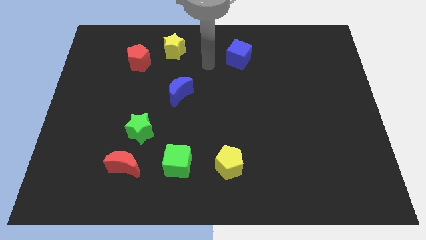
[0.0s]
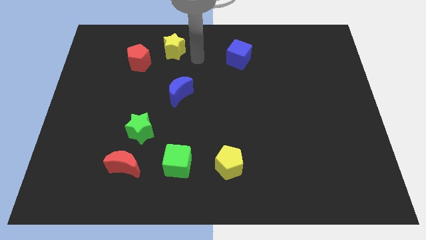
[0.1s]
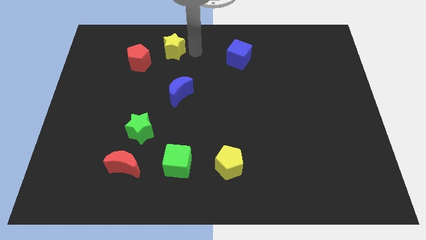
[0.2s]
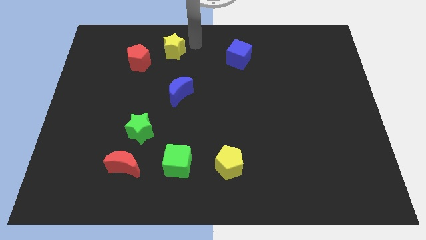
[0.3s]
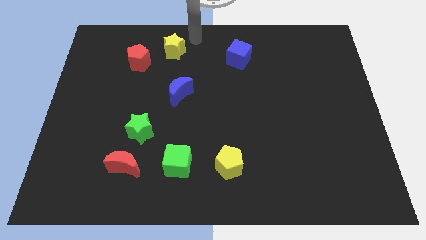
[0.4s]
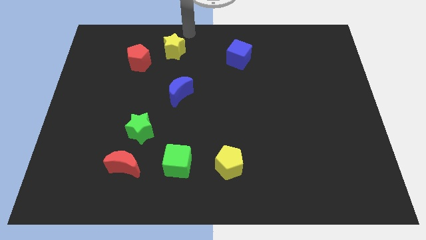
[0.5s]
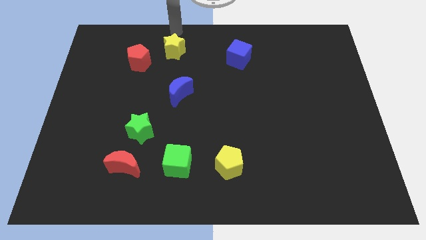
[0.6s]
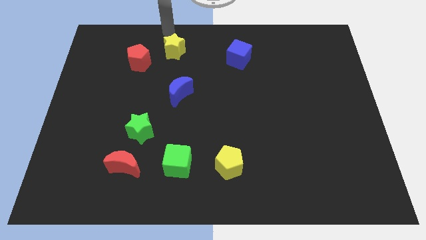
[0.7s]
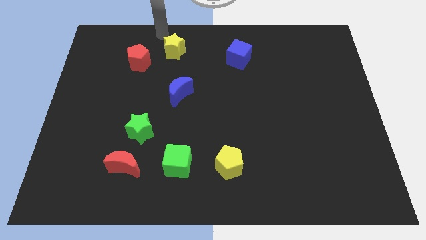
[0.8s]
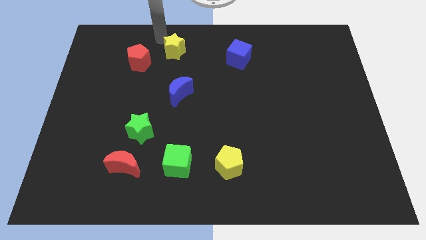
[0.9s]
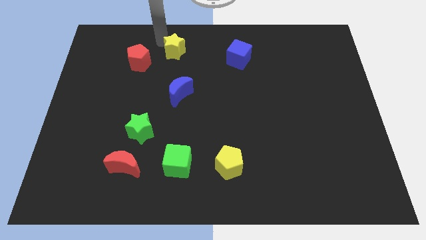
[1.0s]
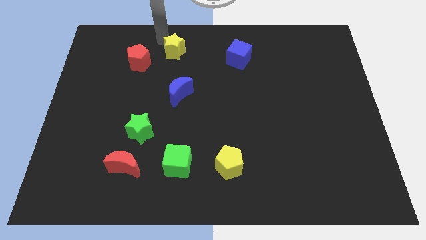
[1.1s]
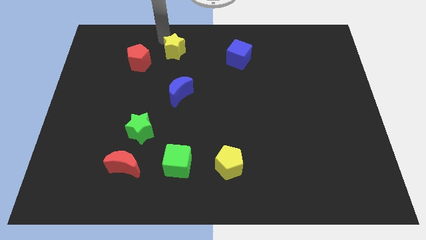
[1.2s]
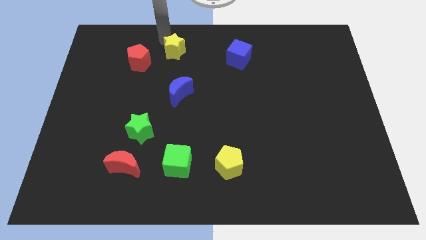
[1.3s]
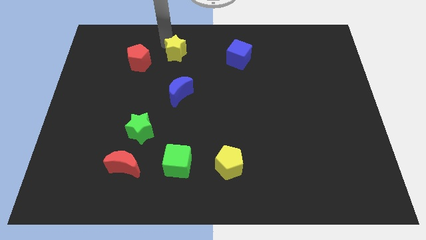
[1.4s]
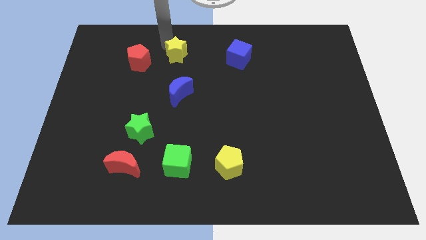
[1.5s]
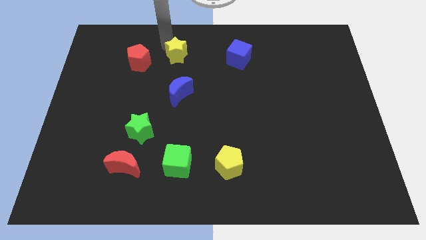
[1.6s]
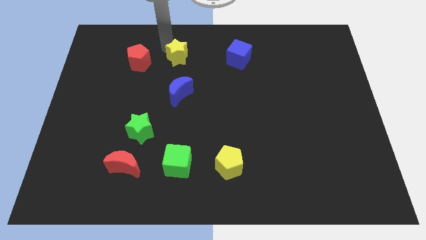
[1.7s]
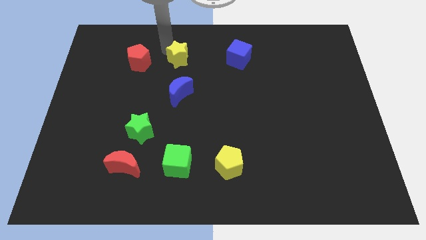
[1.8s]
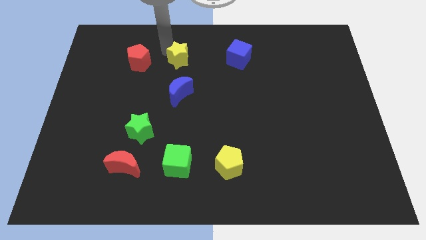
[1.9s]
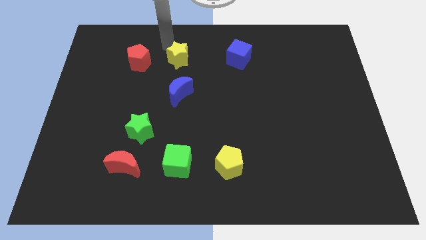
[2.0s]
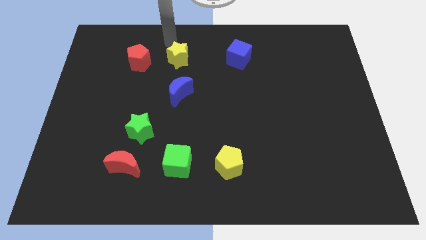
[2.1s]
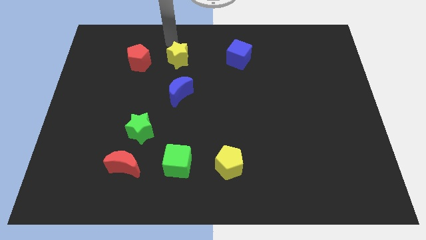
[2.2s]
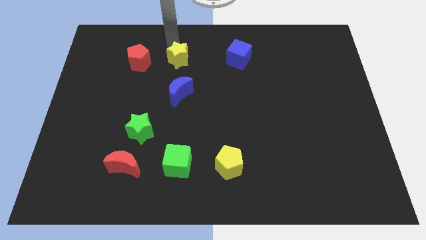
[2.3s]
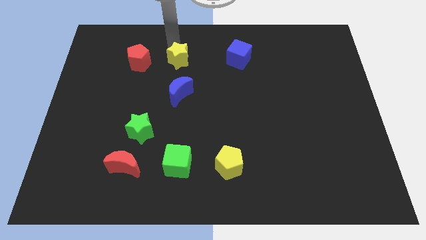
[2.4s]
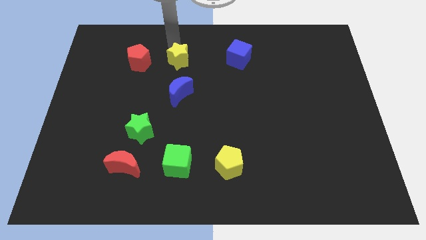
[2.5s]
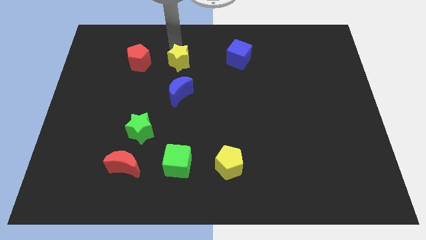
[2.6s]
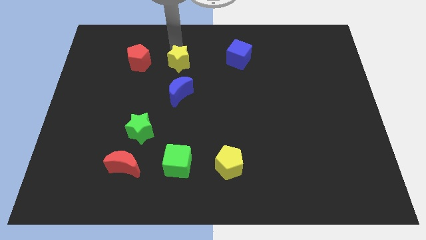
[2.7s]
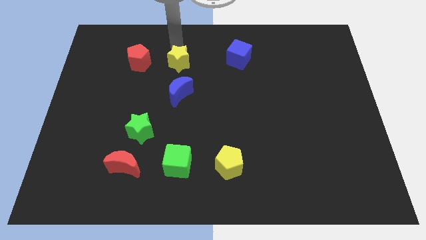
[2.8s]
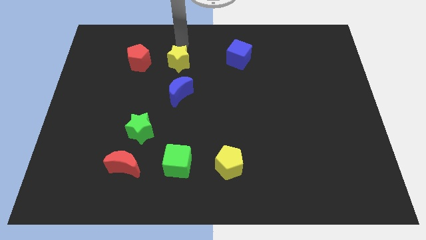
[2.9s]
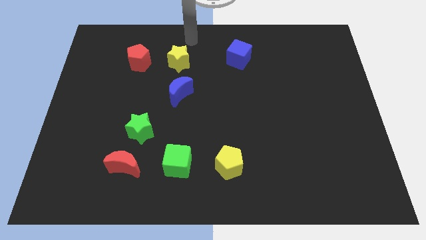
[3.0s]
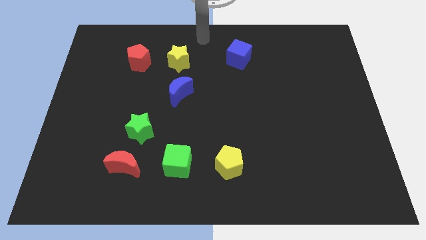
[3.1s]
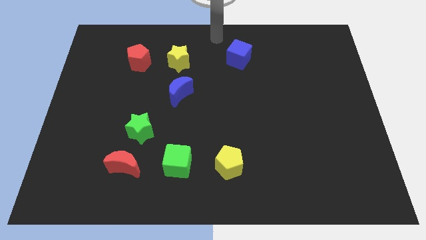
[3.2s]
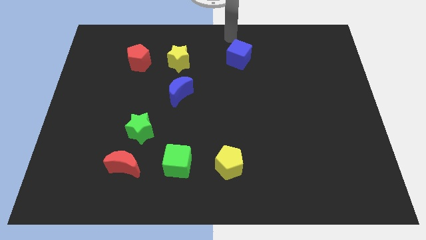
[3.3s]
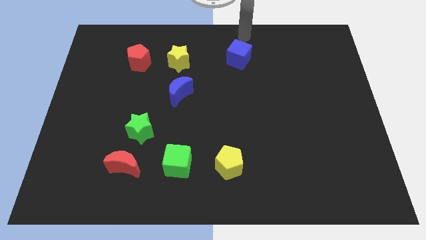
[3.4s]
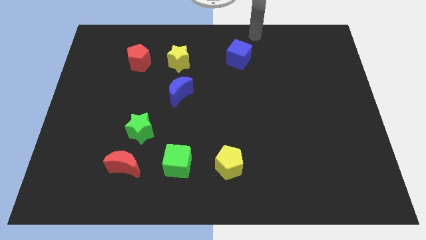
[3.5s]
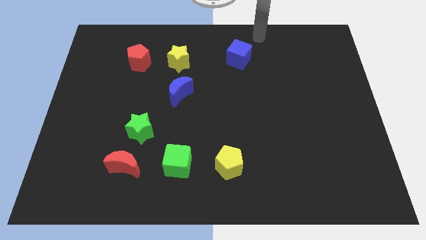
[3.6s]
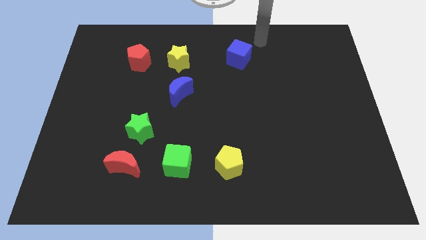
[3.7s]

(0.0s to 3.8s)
place the yellow star in between the red pentagon and the blue cube

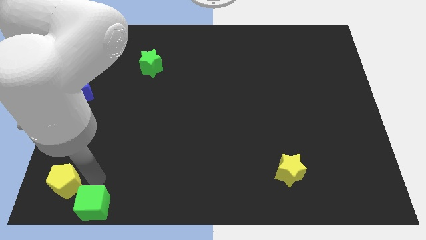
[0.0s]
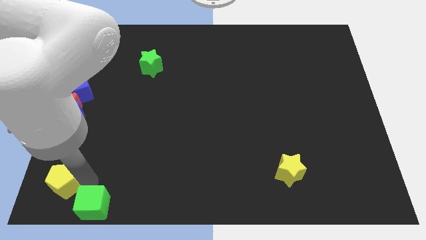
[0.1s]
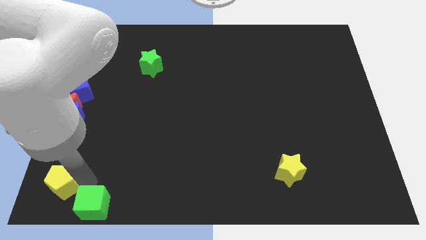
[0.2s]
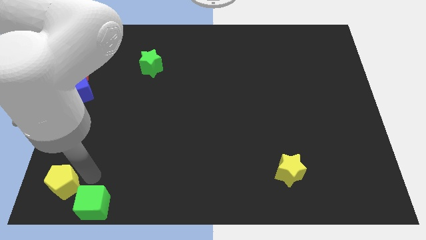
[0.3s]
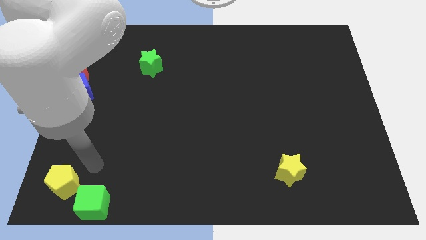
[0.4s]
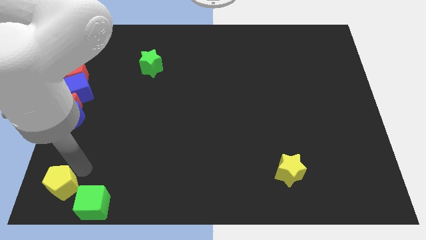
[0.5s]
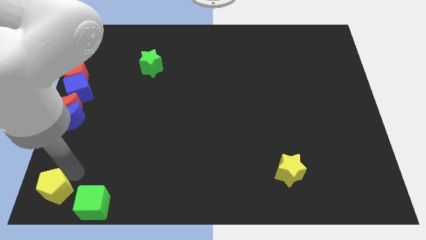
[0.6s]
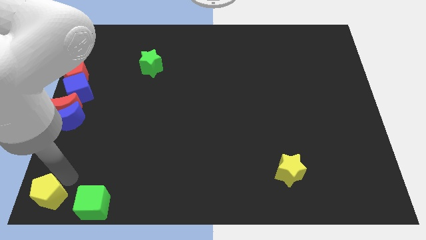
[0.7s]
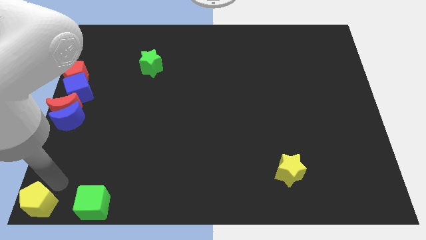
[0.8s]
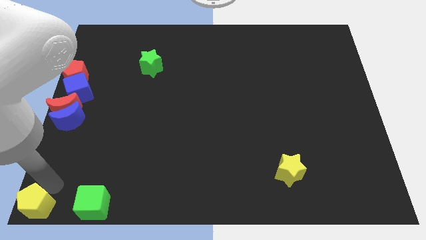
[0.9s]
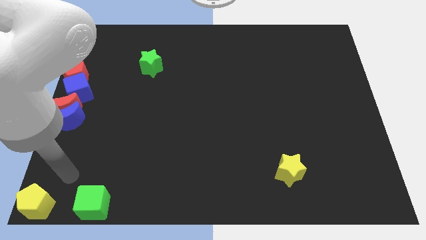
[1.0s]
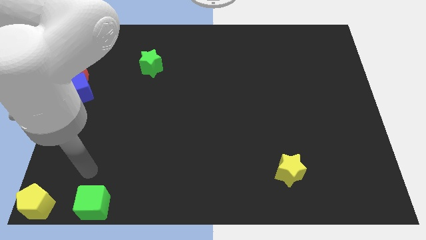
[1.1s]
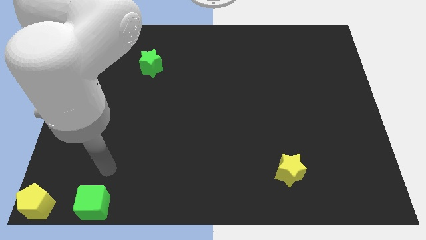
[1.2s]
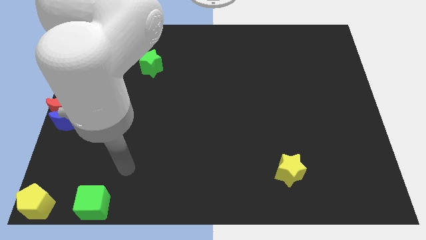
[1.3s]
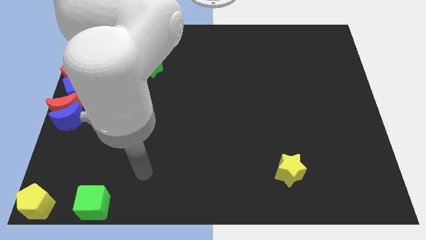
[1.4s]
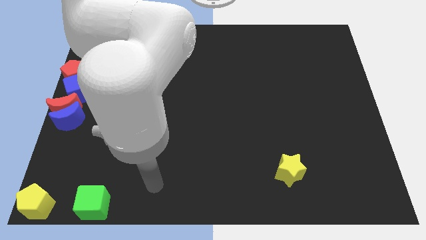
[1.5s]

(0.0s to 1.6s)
move the yellow pentagon to the bottom left corner on the board

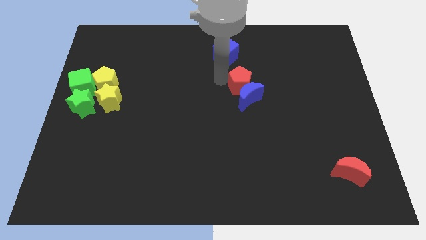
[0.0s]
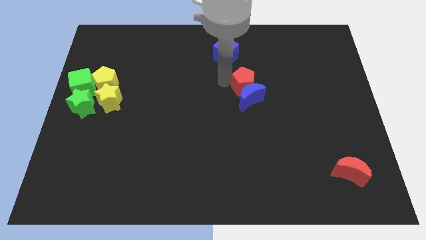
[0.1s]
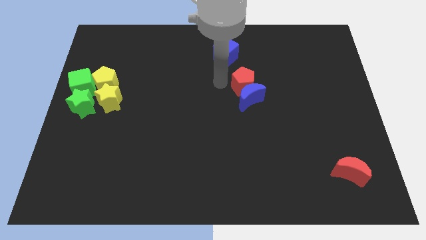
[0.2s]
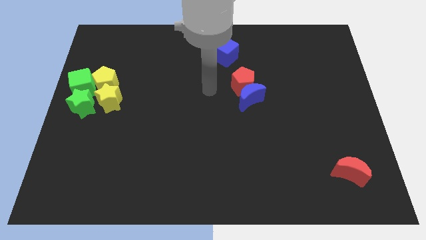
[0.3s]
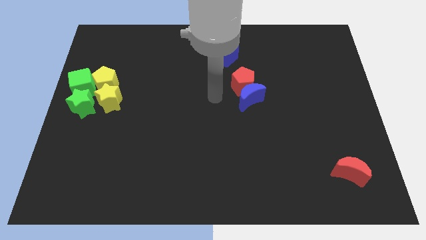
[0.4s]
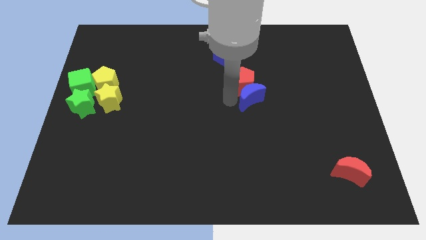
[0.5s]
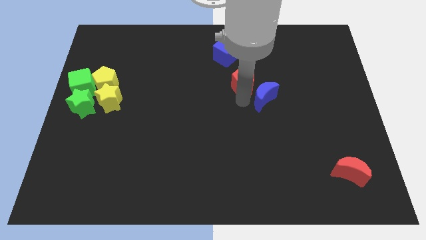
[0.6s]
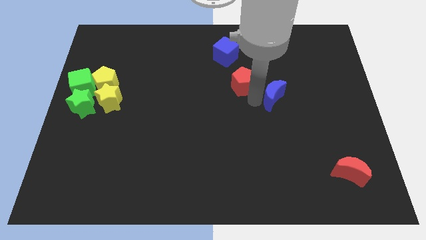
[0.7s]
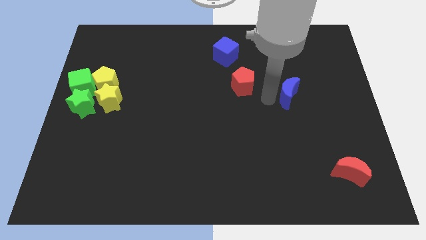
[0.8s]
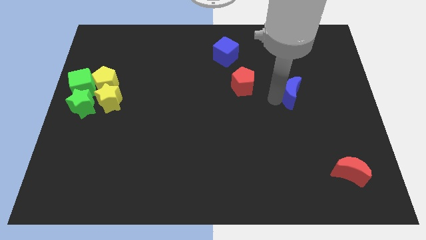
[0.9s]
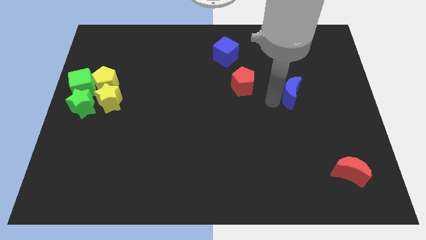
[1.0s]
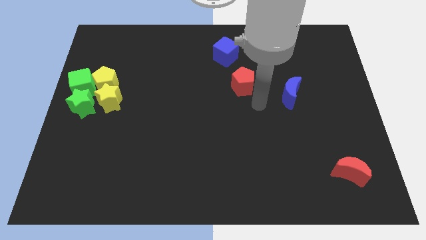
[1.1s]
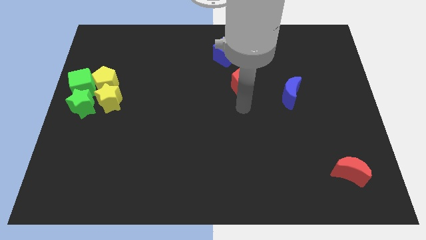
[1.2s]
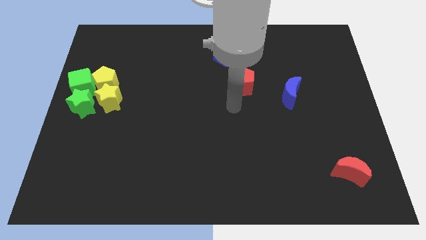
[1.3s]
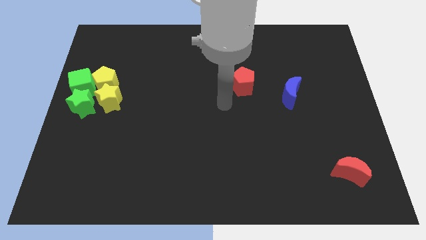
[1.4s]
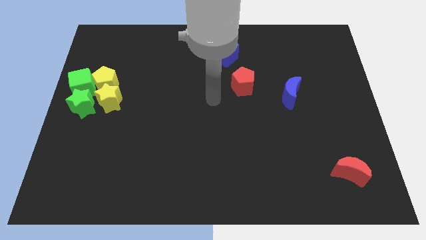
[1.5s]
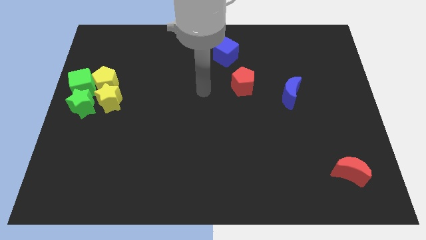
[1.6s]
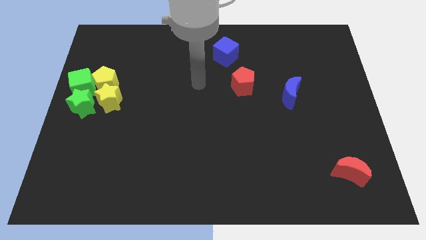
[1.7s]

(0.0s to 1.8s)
separate the red pentagon and blue crescent

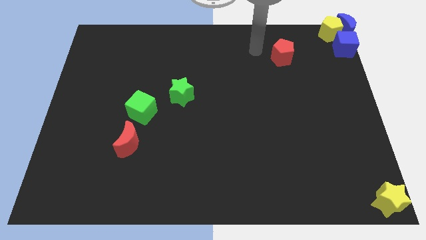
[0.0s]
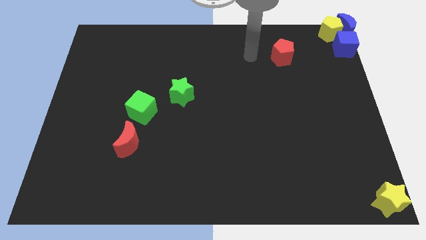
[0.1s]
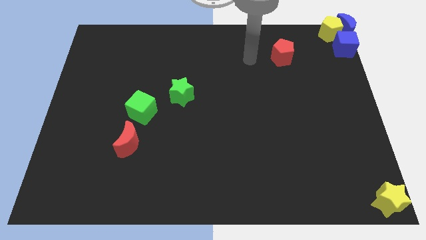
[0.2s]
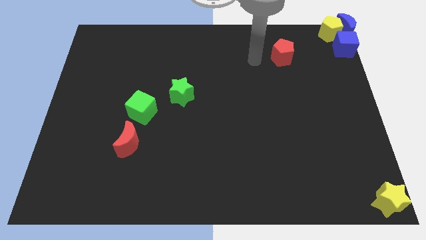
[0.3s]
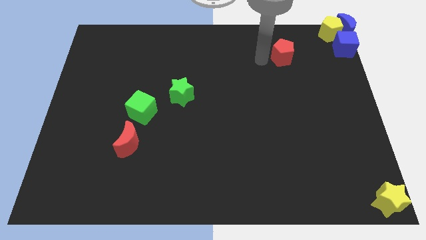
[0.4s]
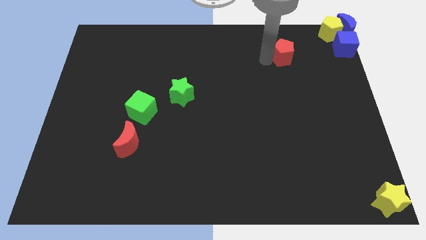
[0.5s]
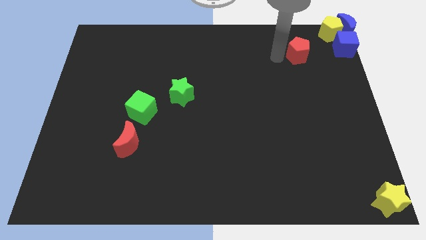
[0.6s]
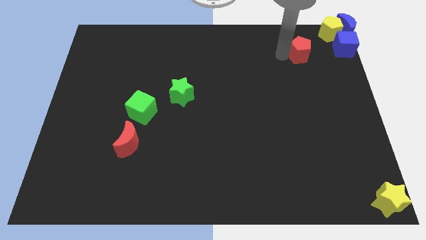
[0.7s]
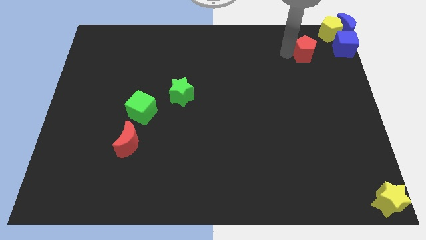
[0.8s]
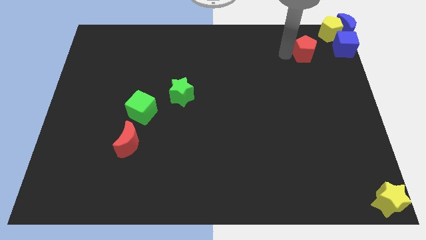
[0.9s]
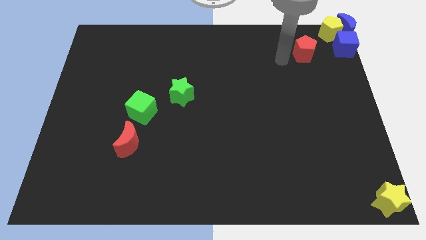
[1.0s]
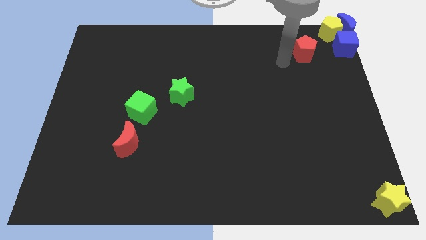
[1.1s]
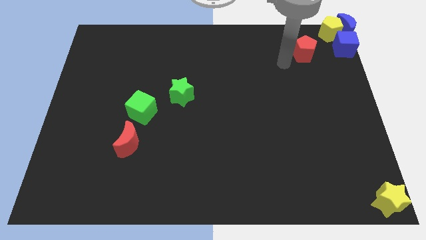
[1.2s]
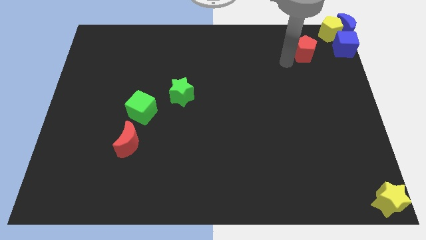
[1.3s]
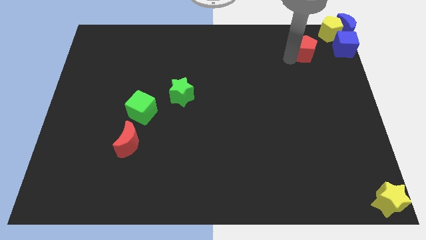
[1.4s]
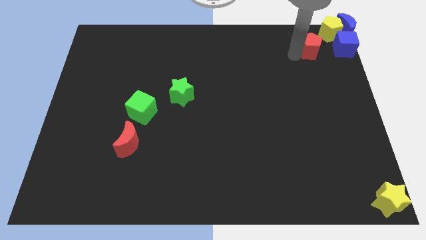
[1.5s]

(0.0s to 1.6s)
move the red pentagon close to the yellow pentagon
